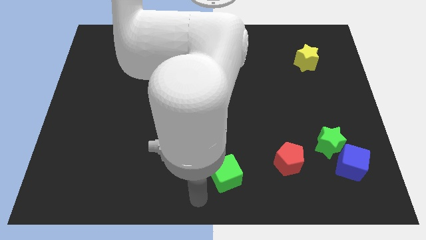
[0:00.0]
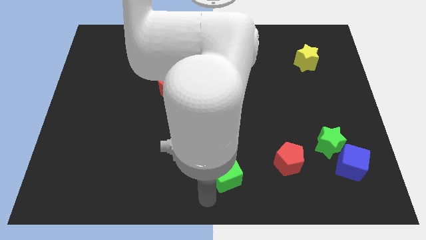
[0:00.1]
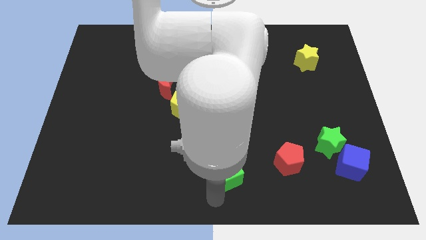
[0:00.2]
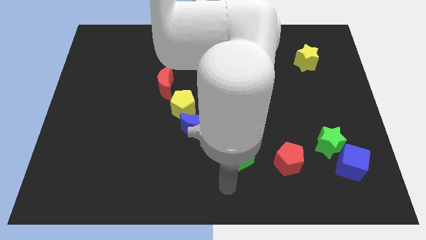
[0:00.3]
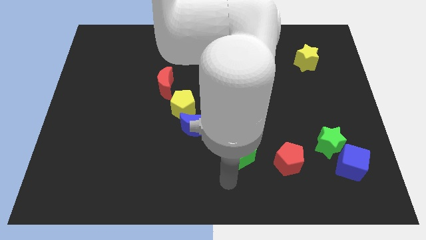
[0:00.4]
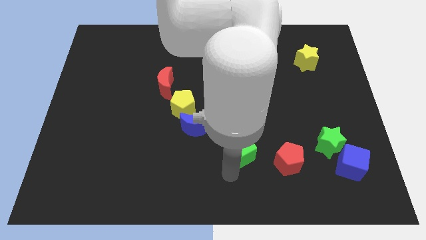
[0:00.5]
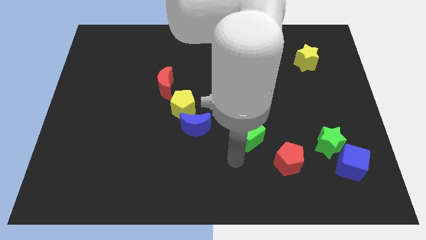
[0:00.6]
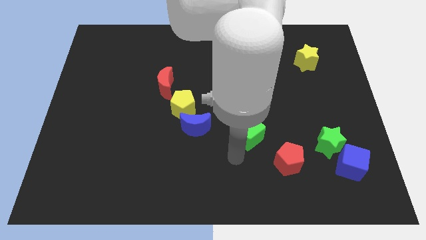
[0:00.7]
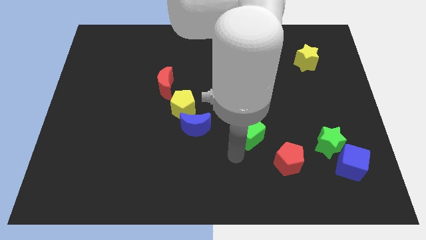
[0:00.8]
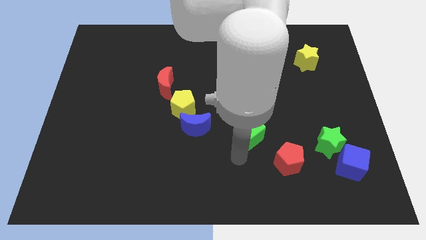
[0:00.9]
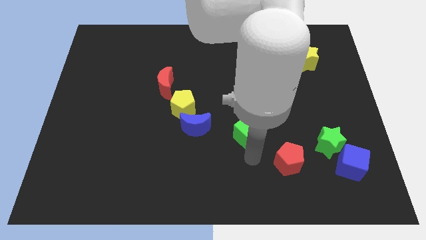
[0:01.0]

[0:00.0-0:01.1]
move the green cube left to the red pentagon

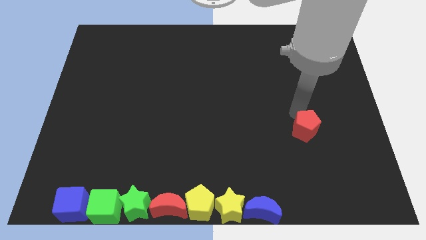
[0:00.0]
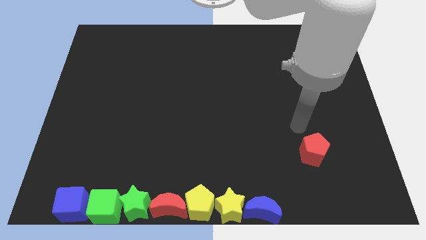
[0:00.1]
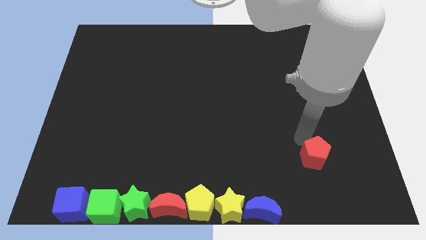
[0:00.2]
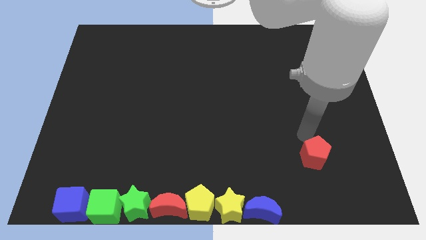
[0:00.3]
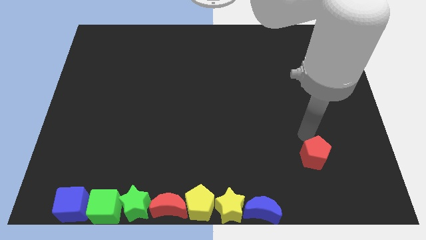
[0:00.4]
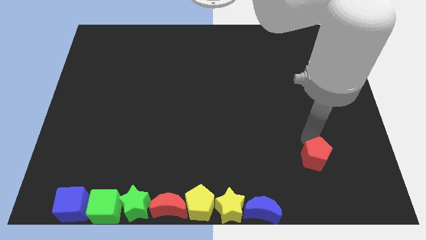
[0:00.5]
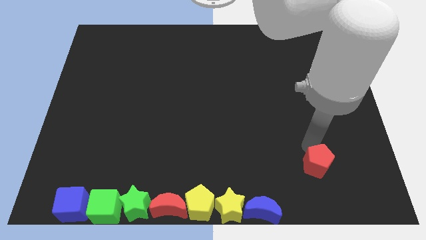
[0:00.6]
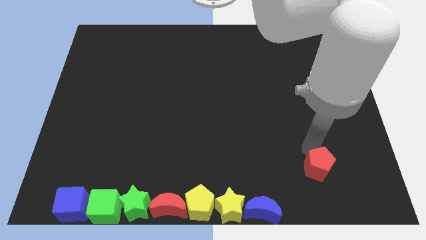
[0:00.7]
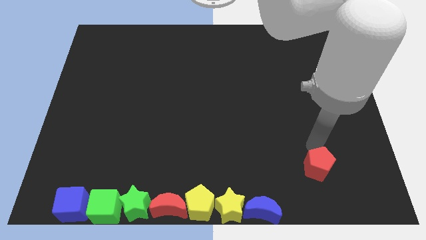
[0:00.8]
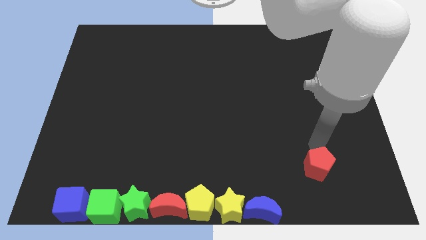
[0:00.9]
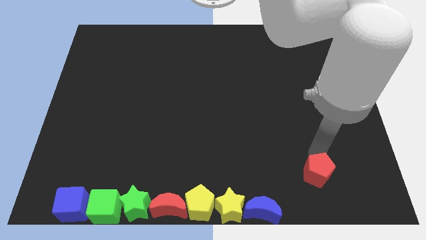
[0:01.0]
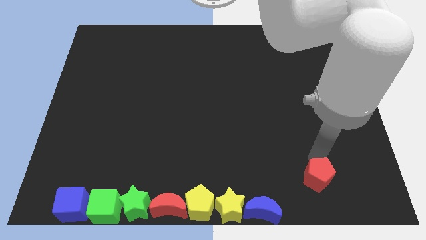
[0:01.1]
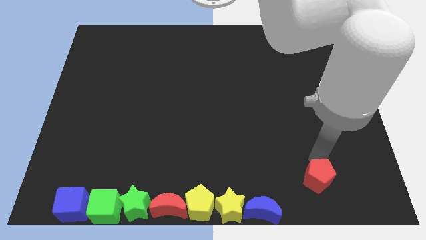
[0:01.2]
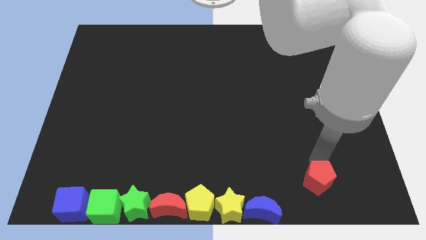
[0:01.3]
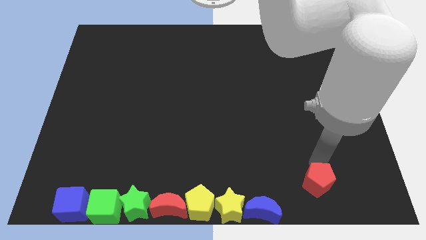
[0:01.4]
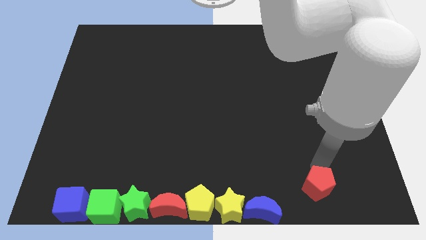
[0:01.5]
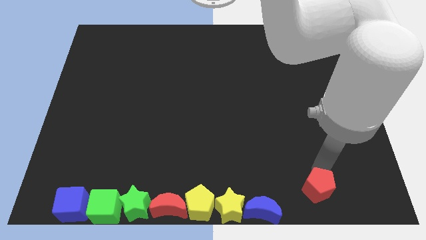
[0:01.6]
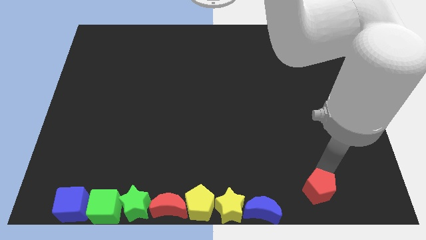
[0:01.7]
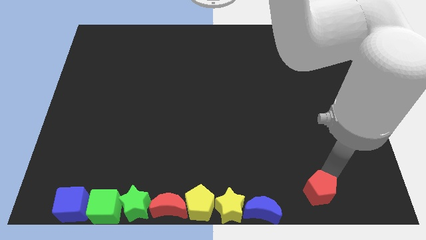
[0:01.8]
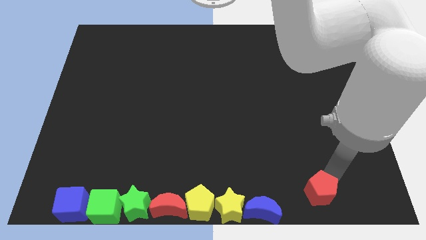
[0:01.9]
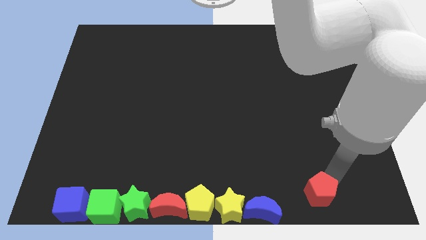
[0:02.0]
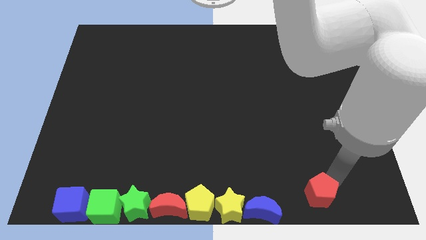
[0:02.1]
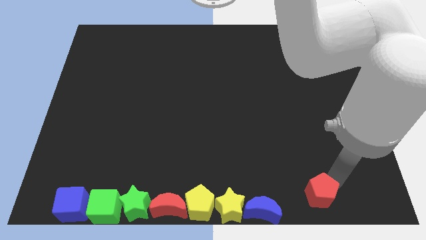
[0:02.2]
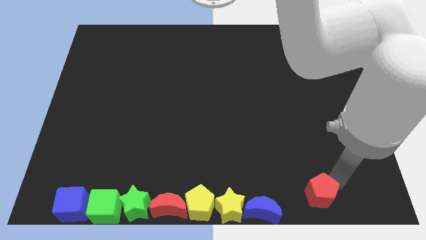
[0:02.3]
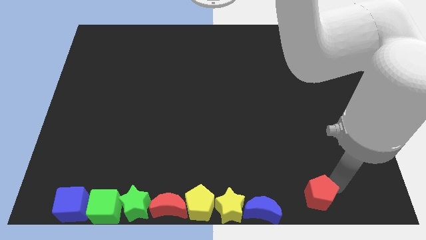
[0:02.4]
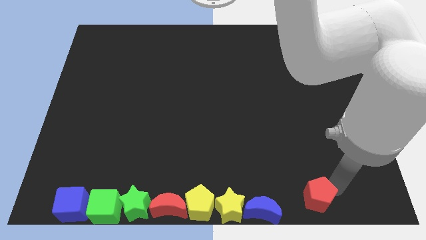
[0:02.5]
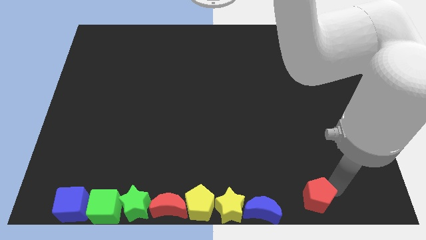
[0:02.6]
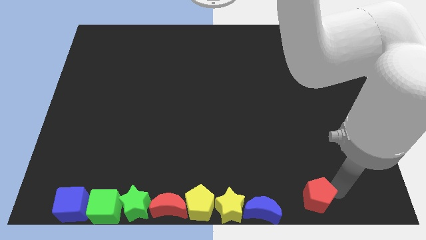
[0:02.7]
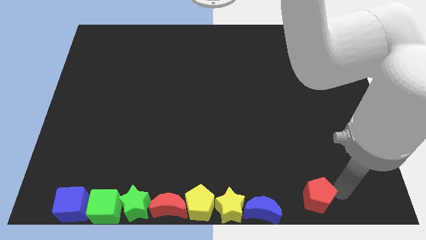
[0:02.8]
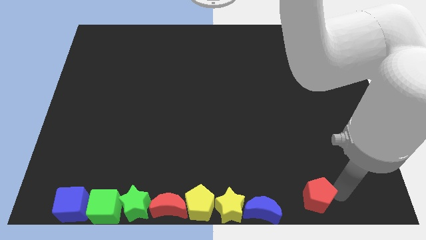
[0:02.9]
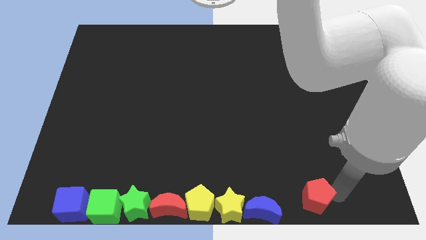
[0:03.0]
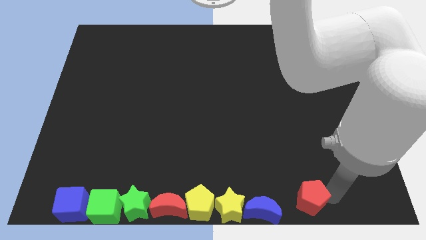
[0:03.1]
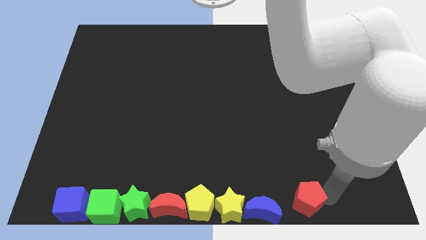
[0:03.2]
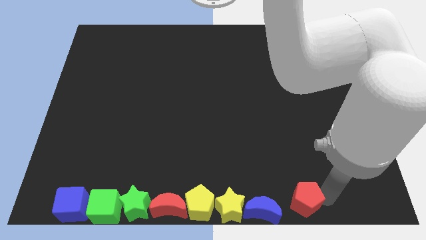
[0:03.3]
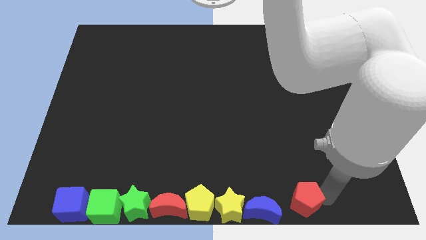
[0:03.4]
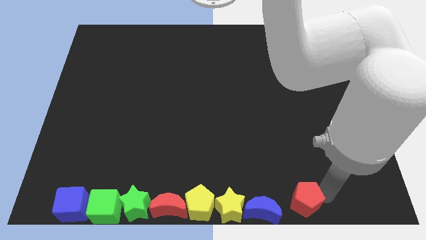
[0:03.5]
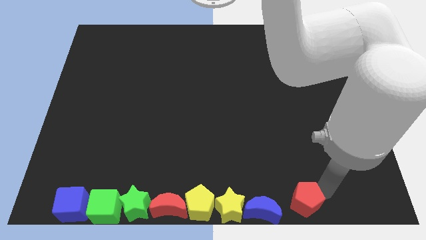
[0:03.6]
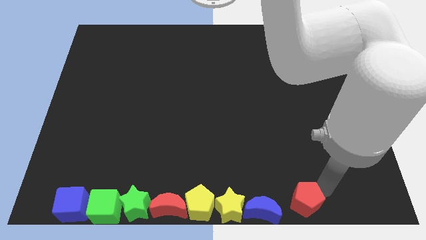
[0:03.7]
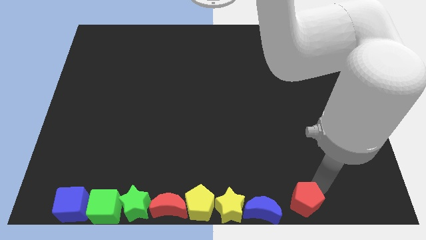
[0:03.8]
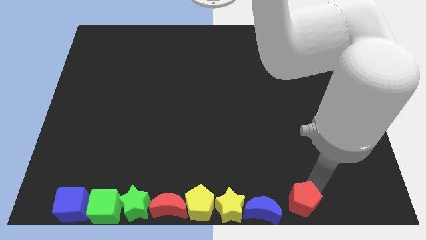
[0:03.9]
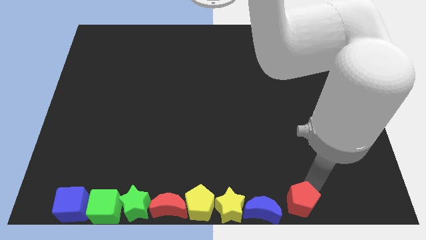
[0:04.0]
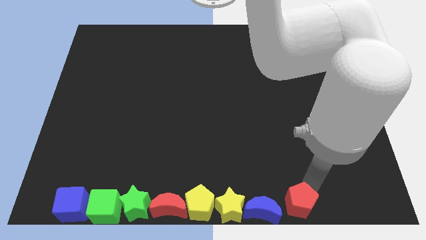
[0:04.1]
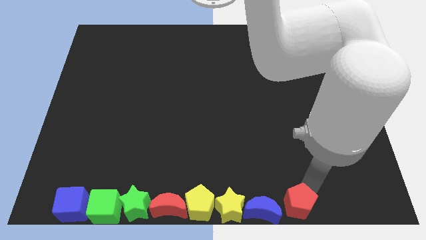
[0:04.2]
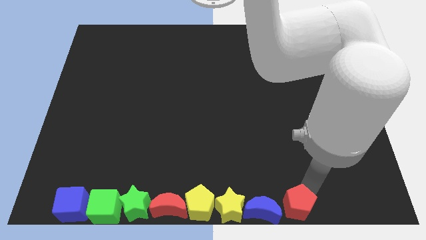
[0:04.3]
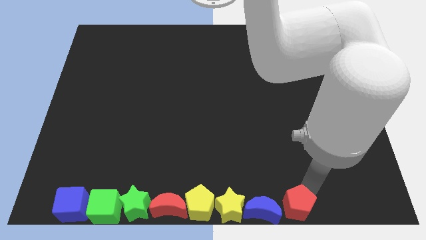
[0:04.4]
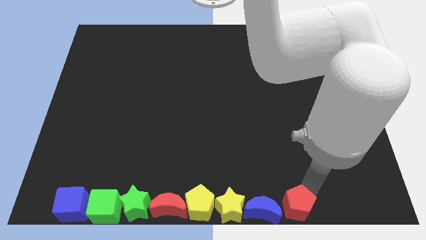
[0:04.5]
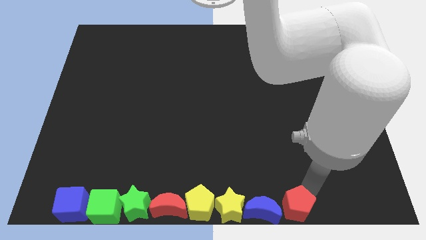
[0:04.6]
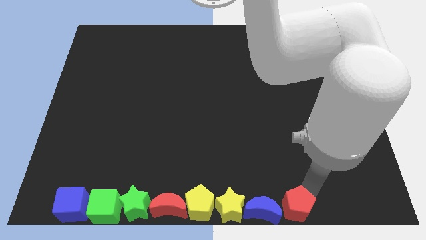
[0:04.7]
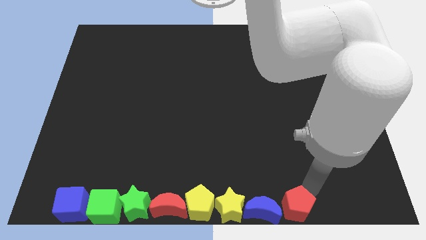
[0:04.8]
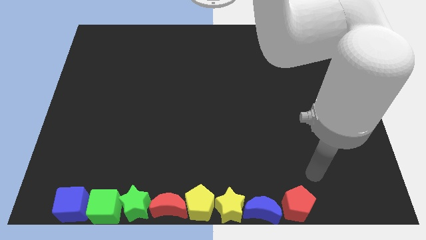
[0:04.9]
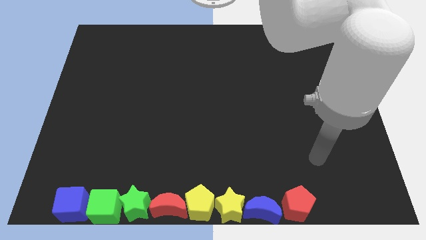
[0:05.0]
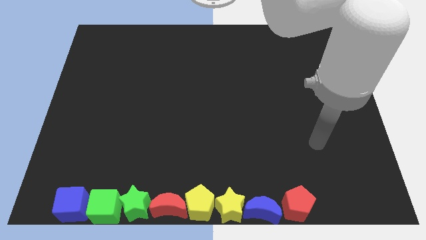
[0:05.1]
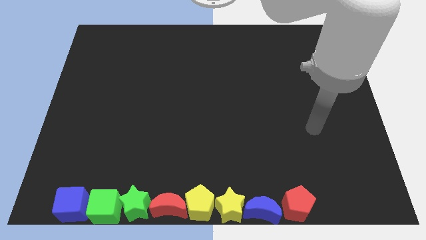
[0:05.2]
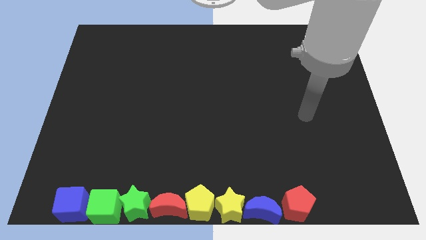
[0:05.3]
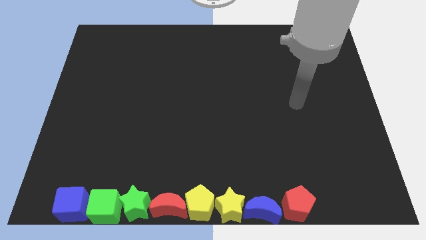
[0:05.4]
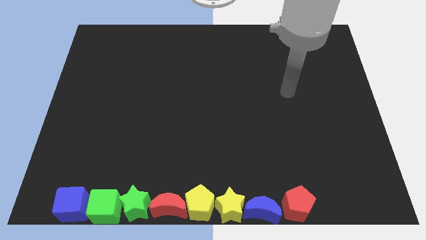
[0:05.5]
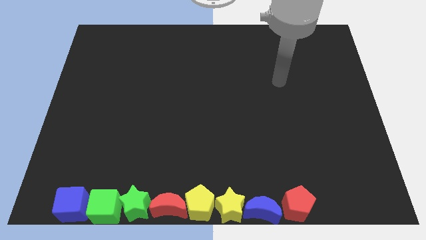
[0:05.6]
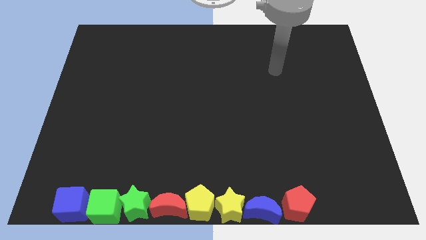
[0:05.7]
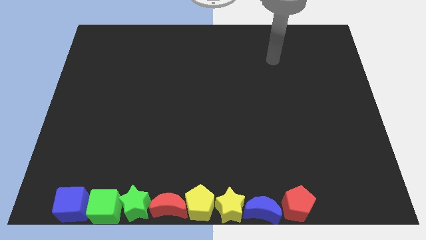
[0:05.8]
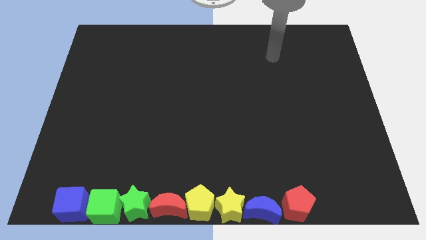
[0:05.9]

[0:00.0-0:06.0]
place the red pentagon beside the blue moon to form a horizontal line with the group of blocks

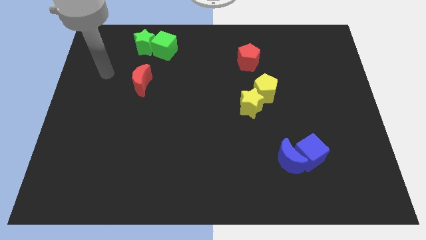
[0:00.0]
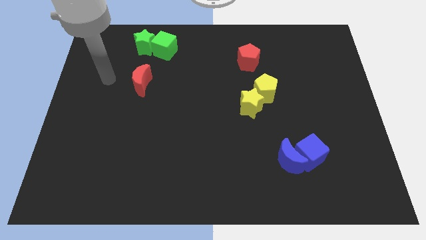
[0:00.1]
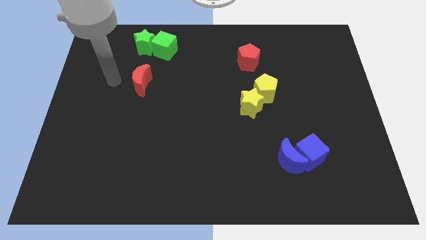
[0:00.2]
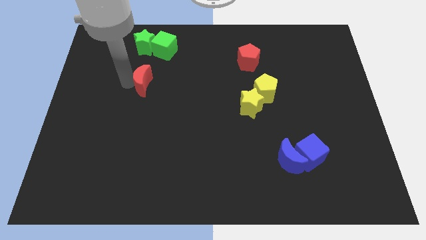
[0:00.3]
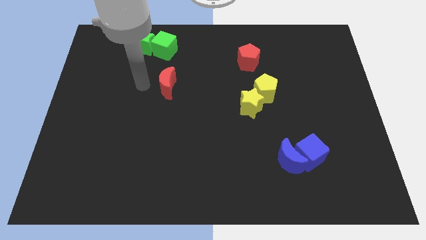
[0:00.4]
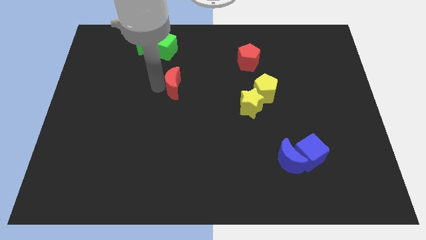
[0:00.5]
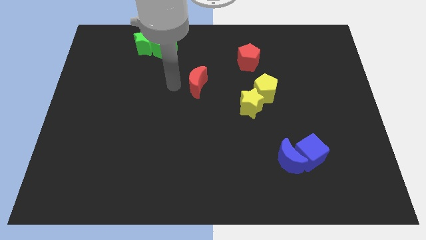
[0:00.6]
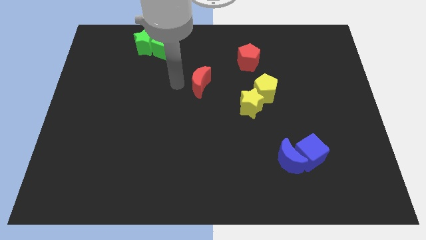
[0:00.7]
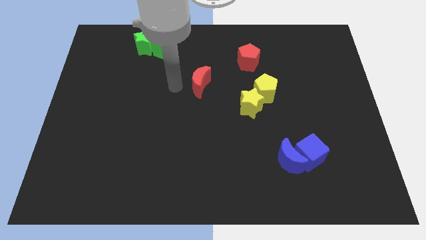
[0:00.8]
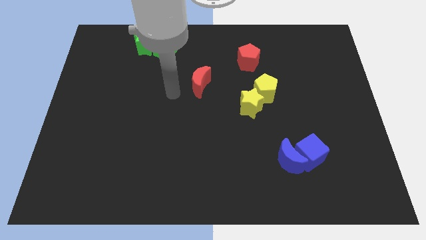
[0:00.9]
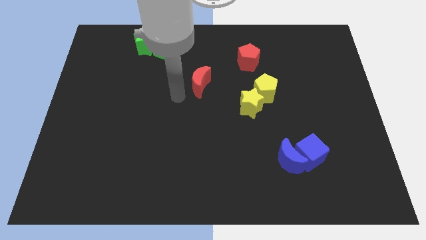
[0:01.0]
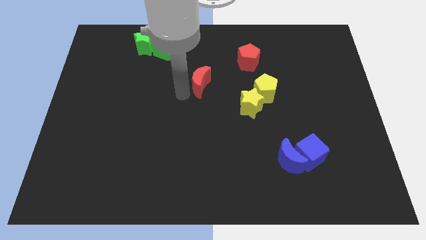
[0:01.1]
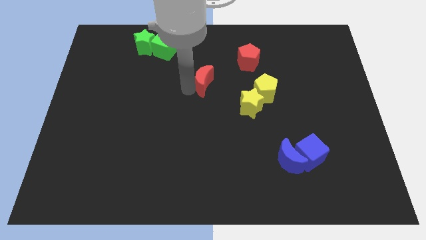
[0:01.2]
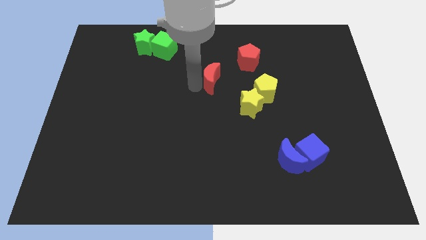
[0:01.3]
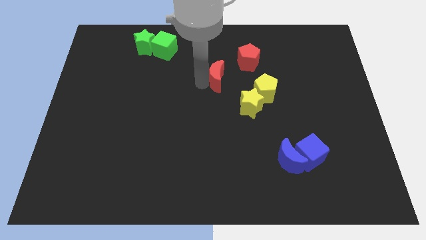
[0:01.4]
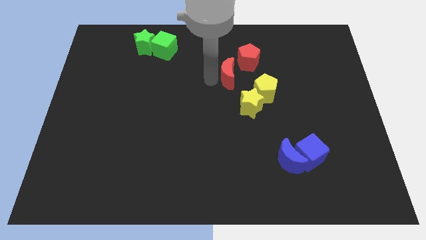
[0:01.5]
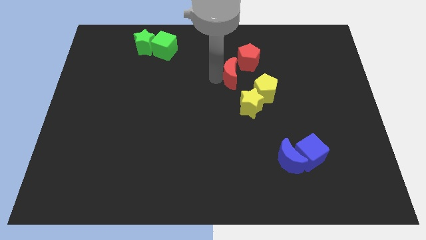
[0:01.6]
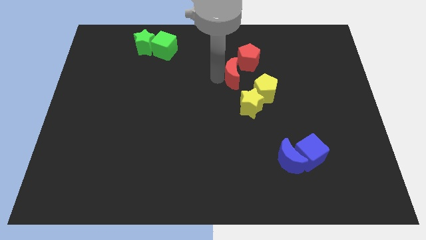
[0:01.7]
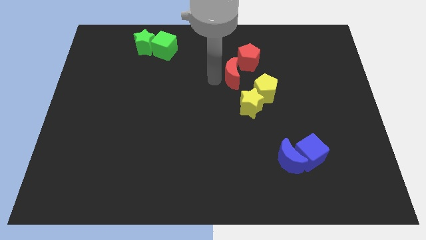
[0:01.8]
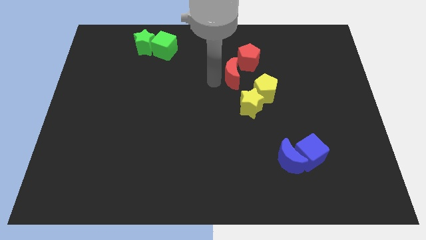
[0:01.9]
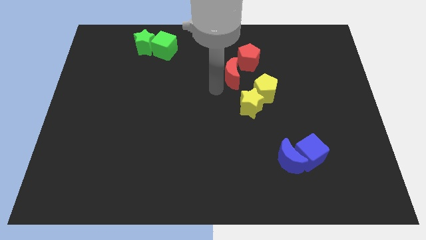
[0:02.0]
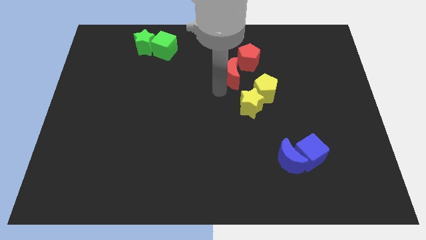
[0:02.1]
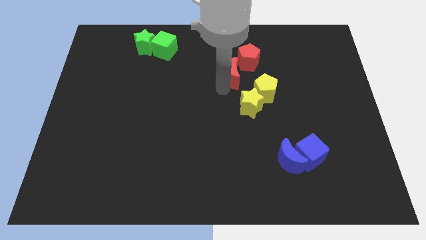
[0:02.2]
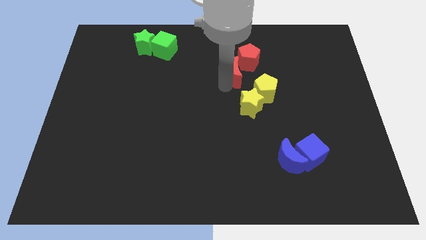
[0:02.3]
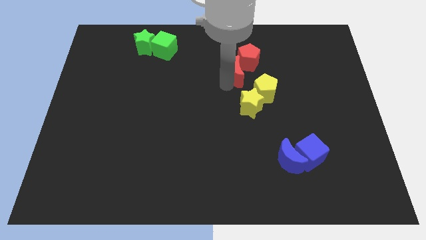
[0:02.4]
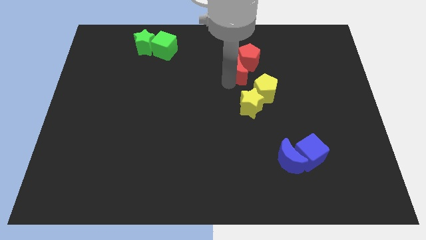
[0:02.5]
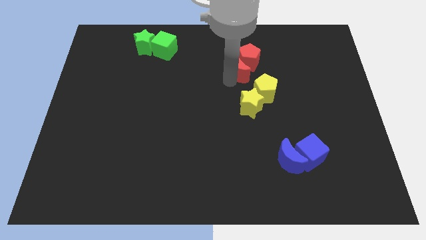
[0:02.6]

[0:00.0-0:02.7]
move the red crescent closer to the red pentagon
